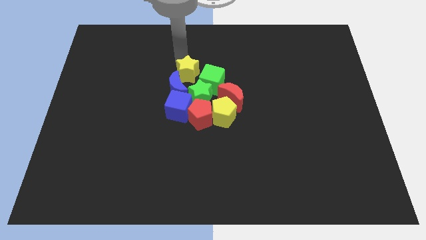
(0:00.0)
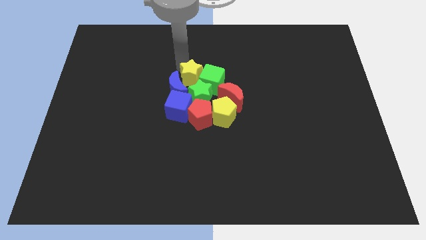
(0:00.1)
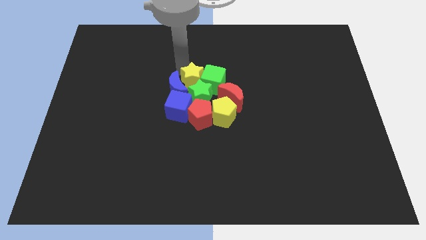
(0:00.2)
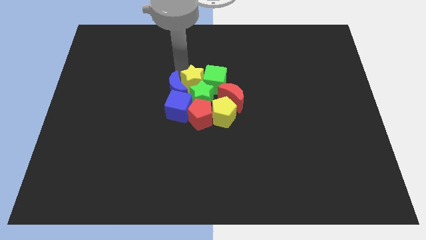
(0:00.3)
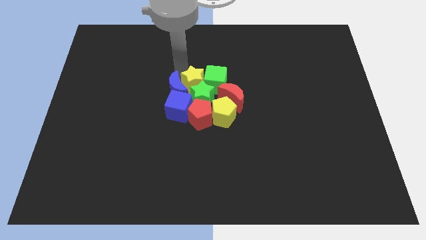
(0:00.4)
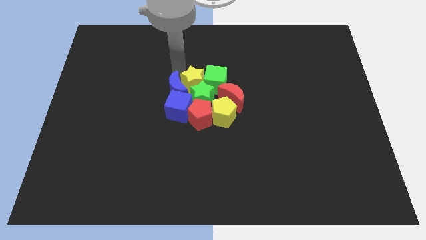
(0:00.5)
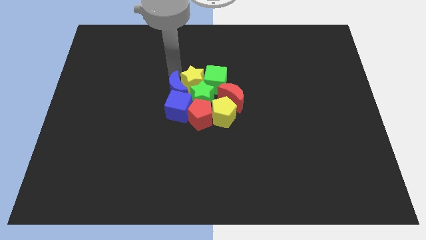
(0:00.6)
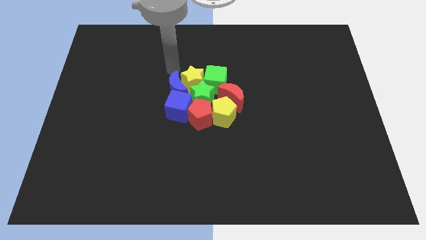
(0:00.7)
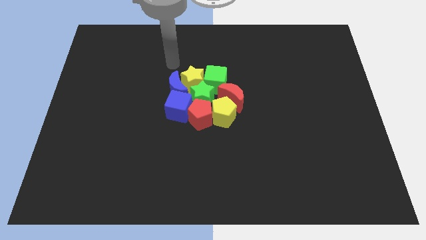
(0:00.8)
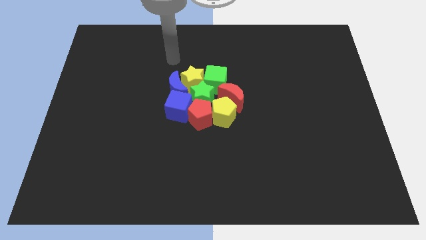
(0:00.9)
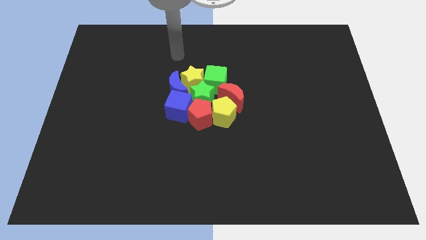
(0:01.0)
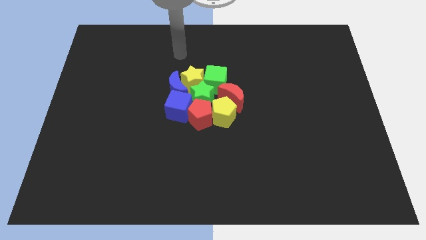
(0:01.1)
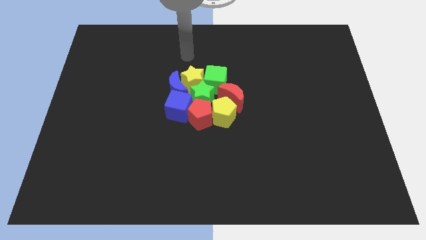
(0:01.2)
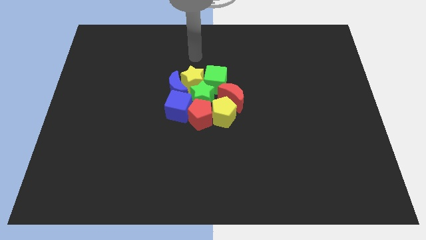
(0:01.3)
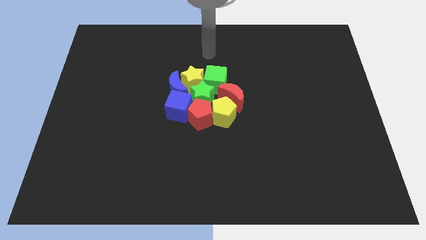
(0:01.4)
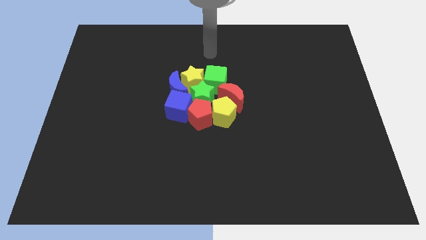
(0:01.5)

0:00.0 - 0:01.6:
push the yellow star into the group of blocks

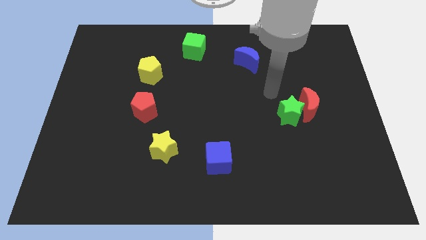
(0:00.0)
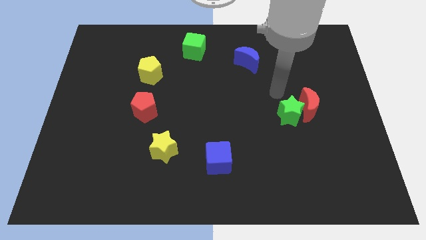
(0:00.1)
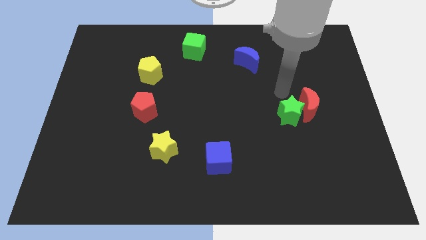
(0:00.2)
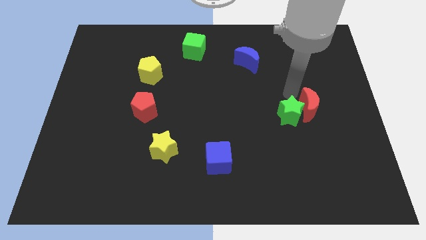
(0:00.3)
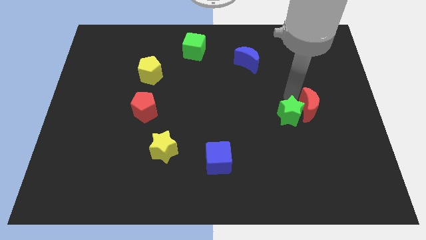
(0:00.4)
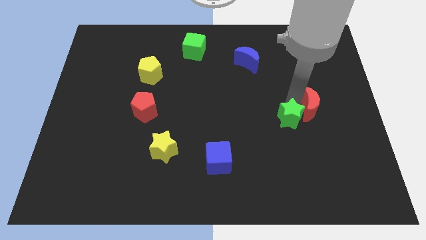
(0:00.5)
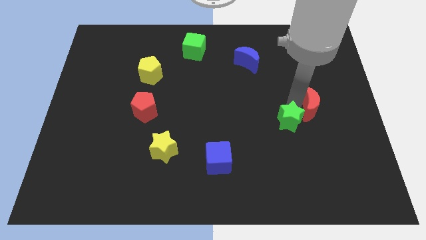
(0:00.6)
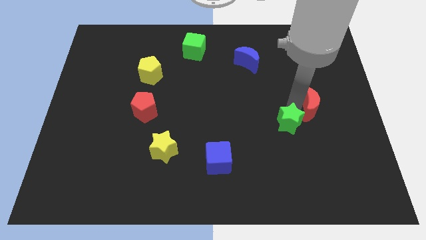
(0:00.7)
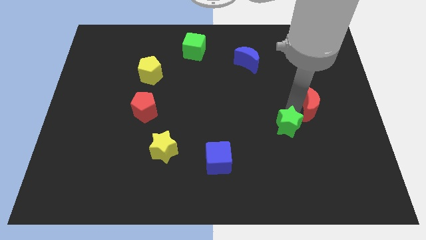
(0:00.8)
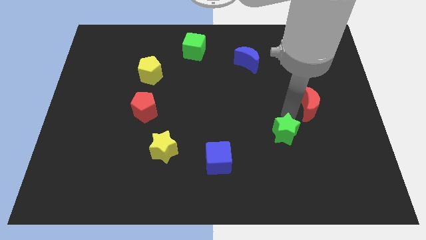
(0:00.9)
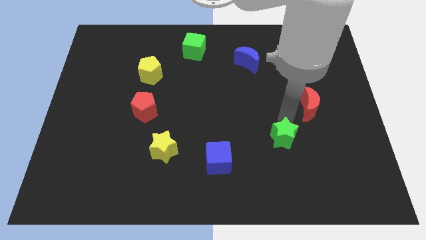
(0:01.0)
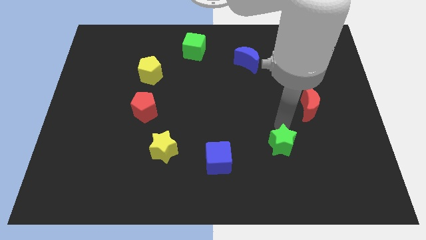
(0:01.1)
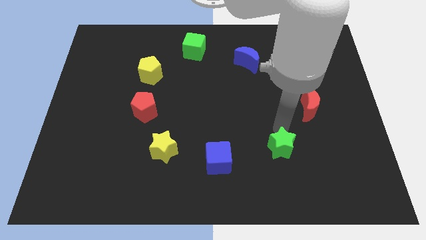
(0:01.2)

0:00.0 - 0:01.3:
separate the green star from red moon

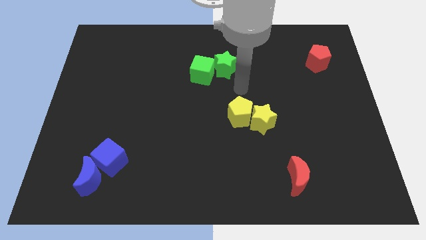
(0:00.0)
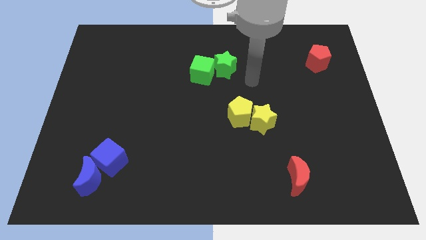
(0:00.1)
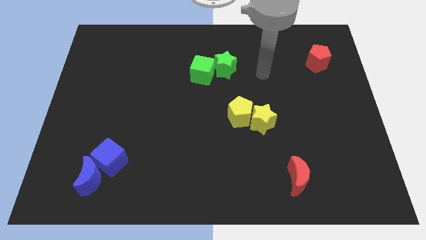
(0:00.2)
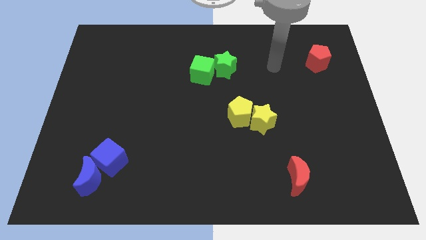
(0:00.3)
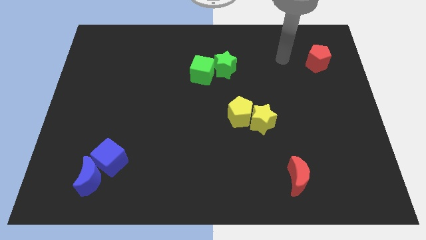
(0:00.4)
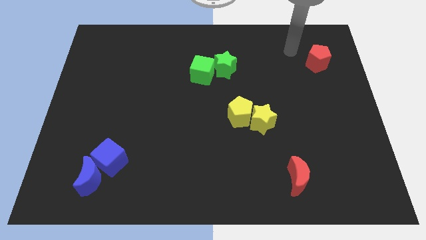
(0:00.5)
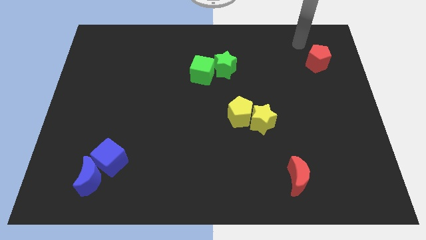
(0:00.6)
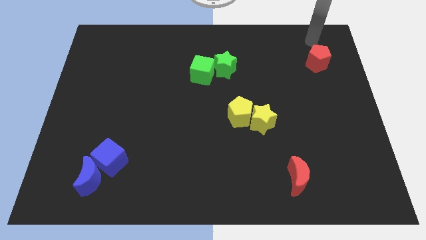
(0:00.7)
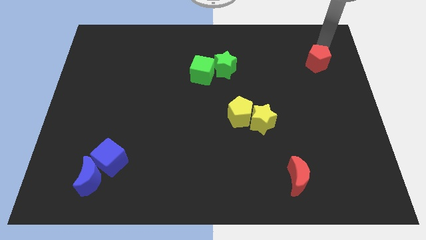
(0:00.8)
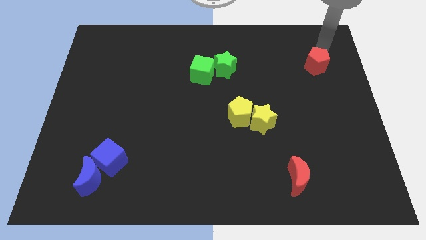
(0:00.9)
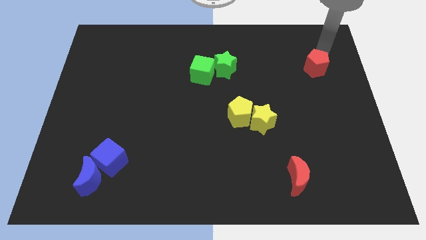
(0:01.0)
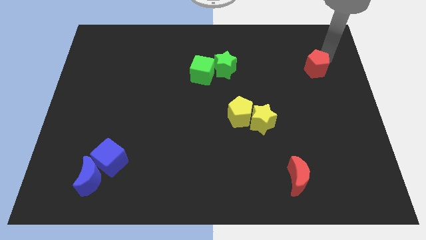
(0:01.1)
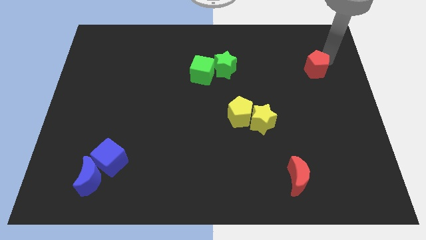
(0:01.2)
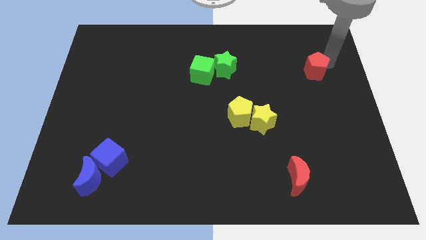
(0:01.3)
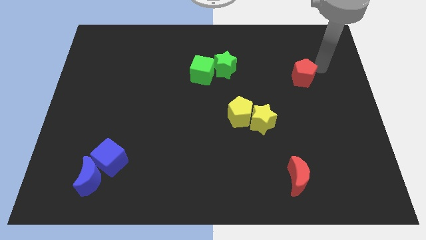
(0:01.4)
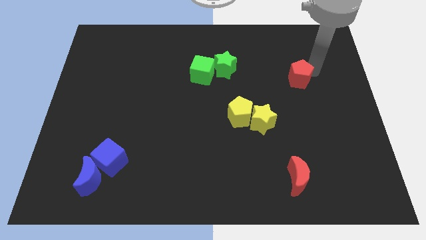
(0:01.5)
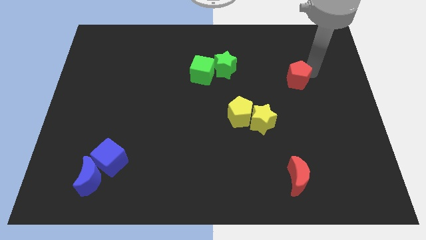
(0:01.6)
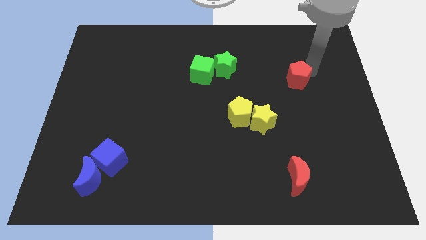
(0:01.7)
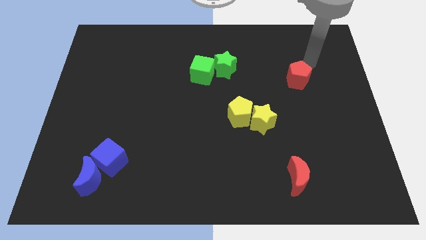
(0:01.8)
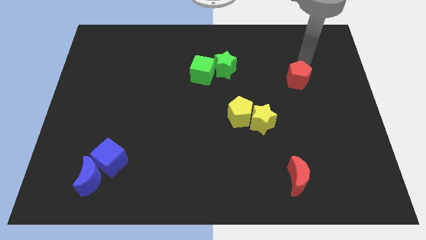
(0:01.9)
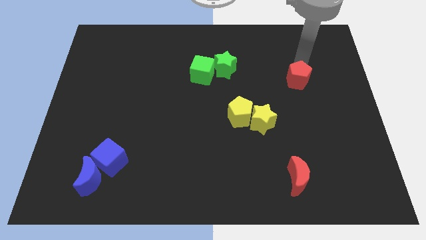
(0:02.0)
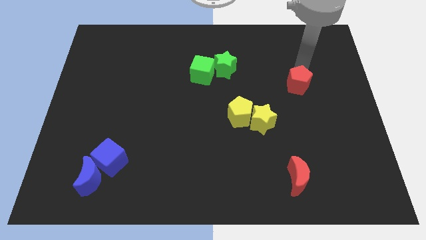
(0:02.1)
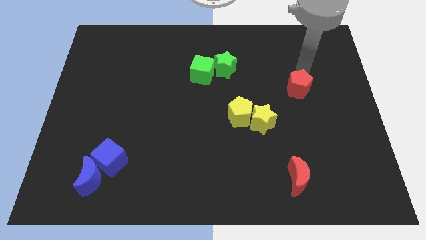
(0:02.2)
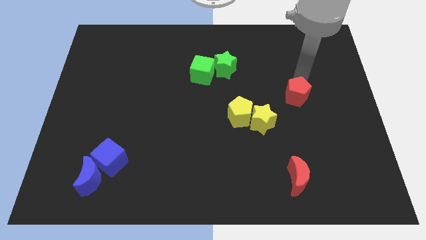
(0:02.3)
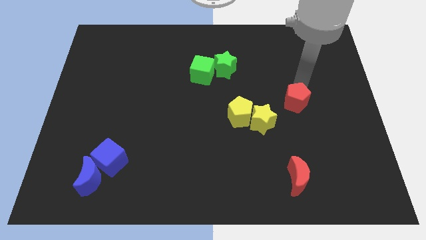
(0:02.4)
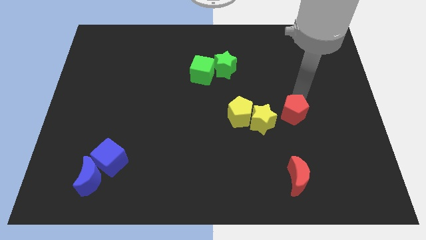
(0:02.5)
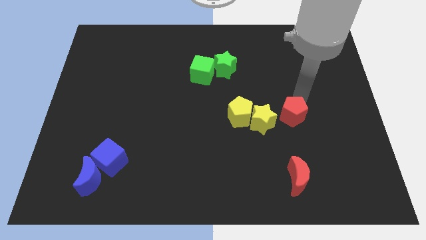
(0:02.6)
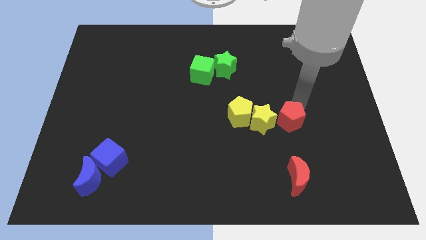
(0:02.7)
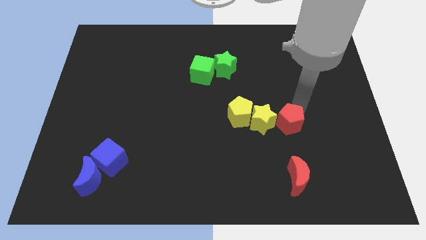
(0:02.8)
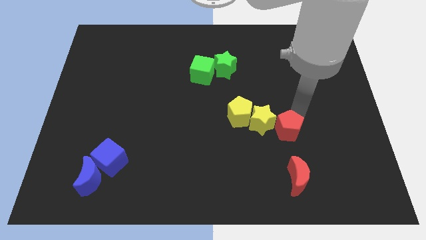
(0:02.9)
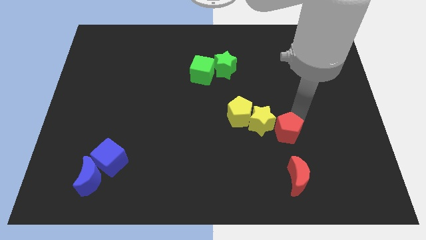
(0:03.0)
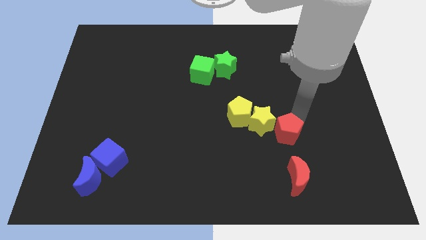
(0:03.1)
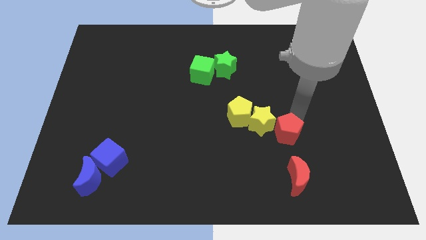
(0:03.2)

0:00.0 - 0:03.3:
slide the red pentagon vertically above the red moon

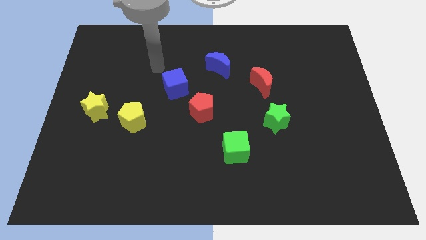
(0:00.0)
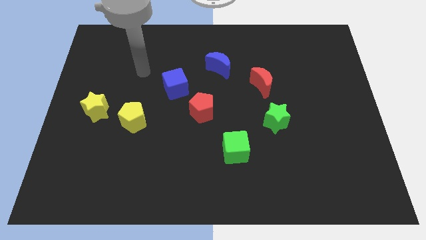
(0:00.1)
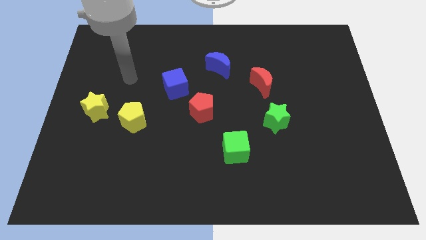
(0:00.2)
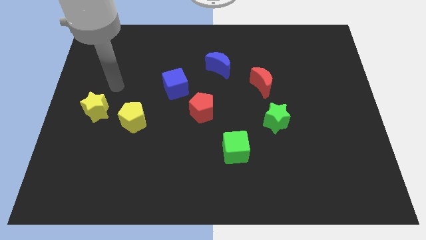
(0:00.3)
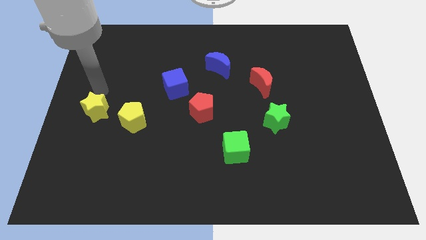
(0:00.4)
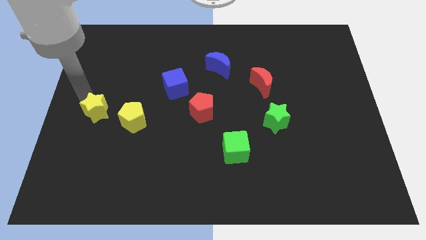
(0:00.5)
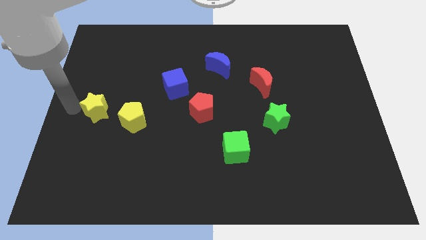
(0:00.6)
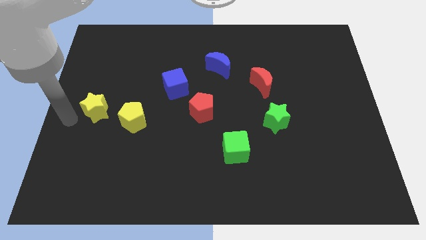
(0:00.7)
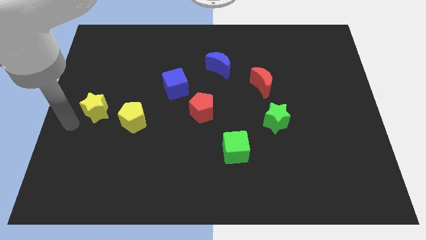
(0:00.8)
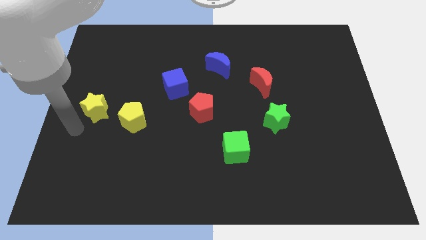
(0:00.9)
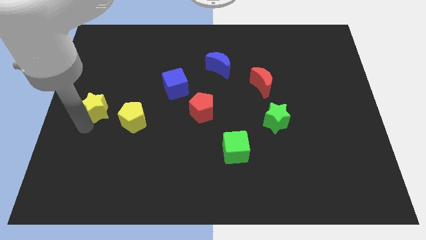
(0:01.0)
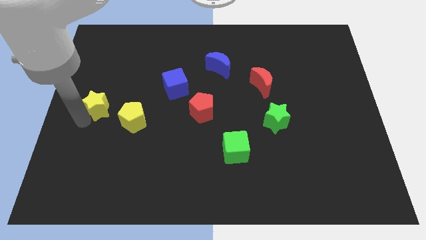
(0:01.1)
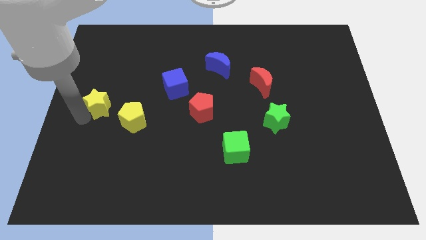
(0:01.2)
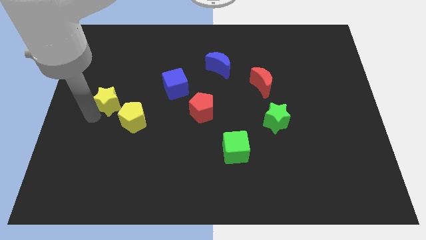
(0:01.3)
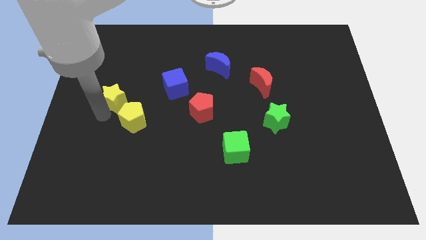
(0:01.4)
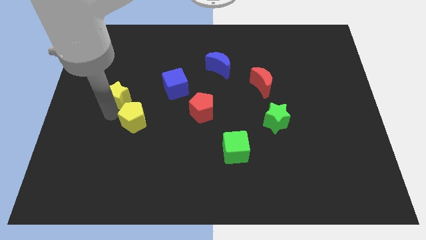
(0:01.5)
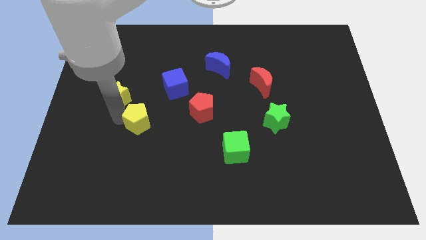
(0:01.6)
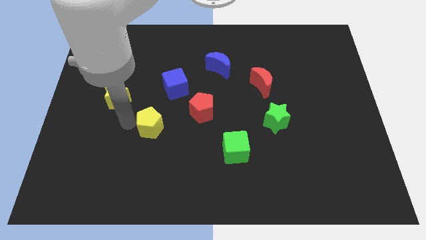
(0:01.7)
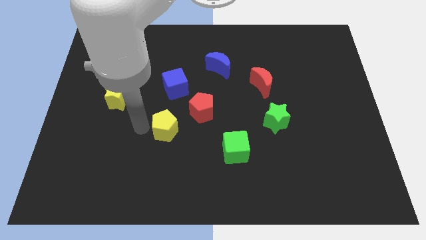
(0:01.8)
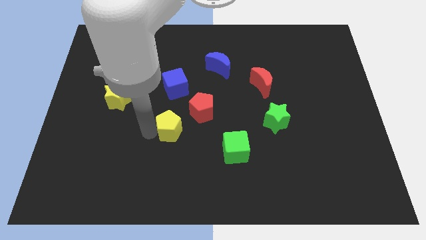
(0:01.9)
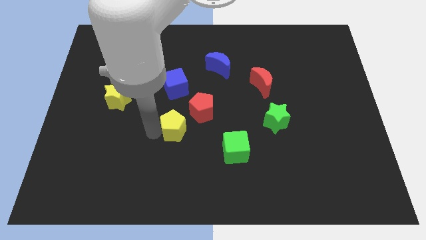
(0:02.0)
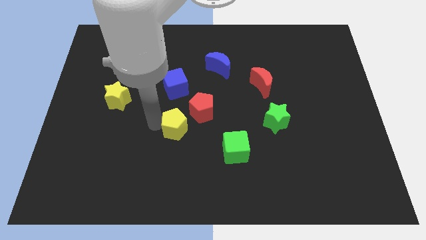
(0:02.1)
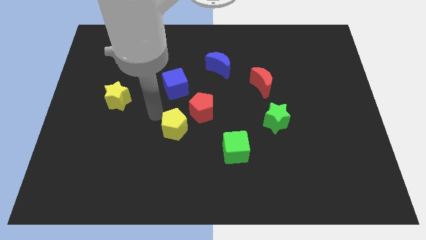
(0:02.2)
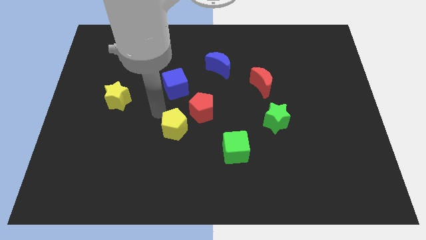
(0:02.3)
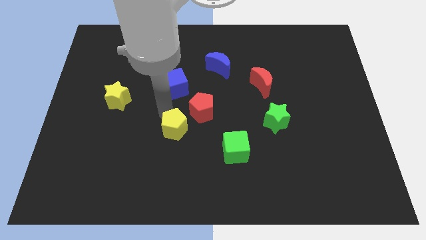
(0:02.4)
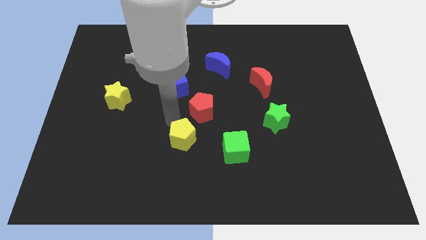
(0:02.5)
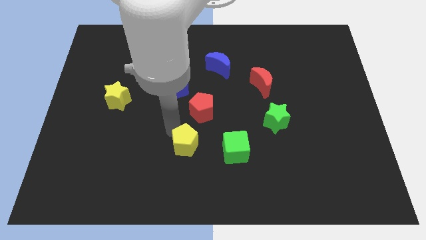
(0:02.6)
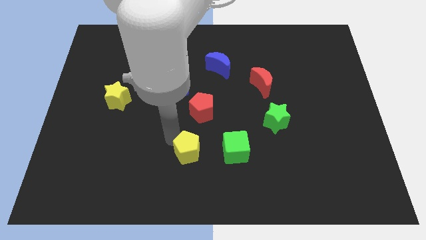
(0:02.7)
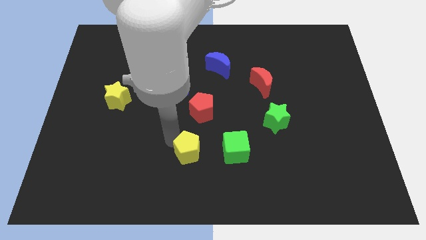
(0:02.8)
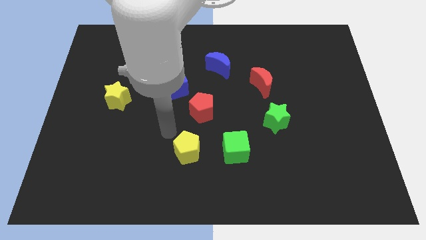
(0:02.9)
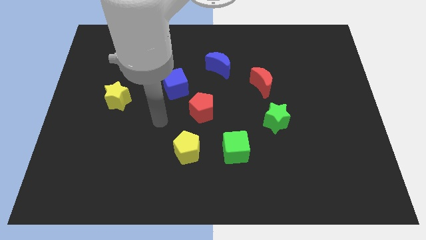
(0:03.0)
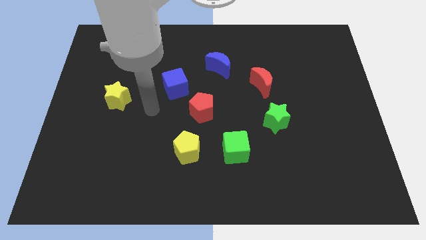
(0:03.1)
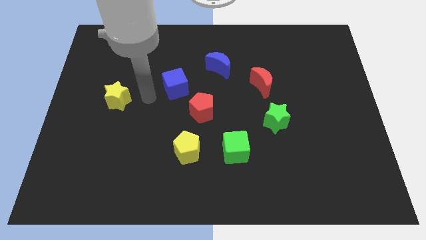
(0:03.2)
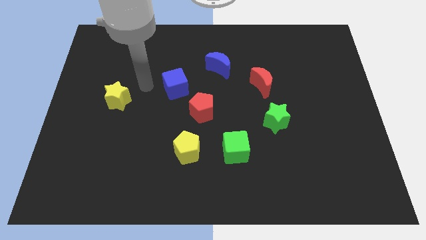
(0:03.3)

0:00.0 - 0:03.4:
separate the yellow blocks an push pentagon downwards
